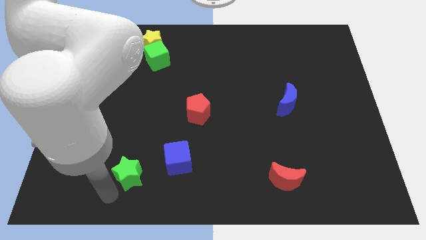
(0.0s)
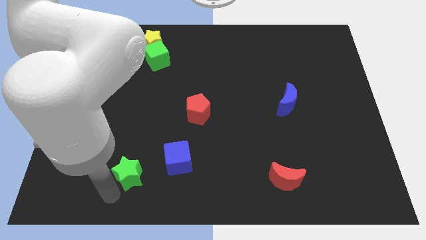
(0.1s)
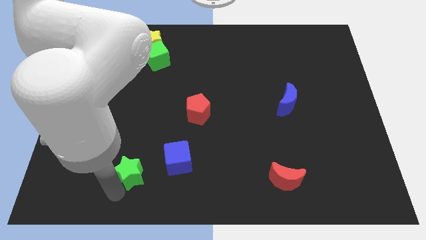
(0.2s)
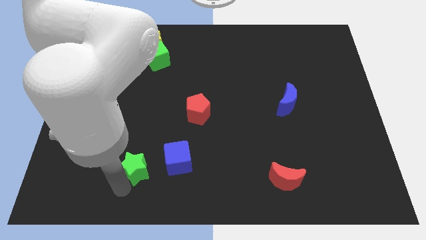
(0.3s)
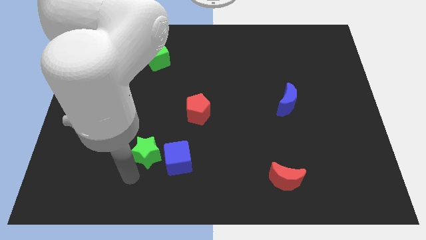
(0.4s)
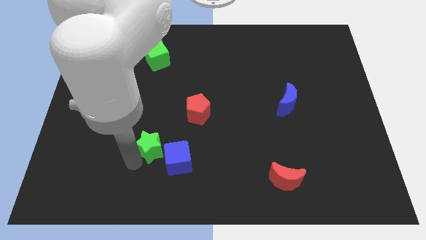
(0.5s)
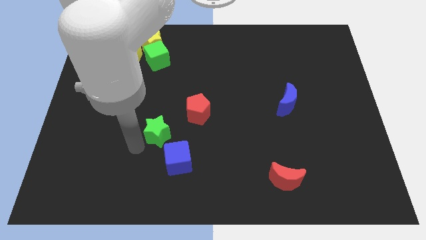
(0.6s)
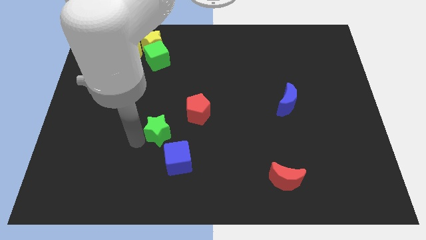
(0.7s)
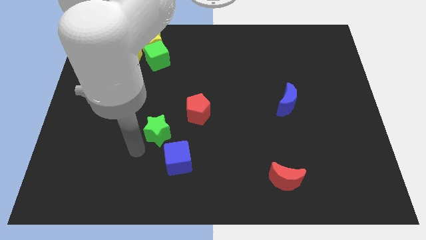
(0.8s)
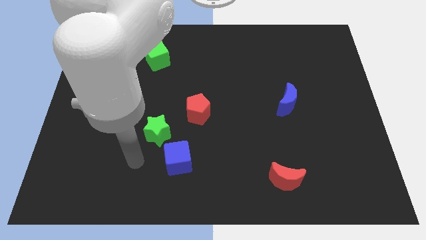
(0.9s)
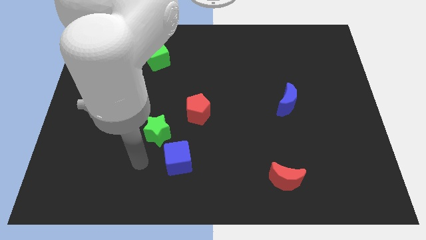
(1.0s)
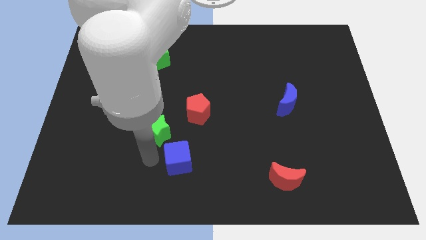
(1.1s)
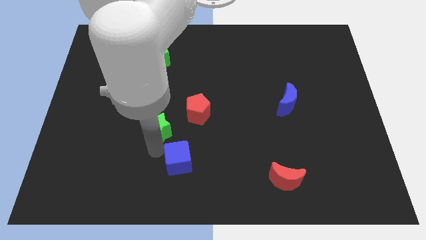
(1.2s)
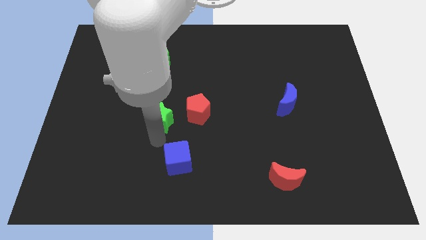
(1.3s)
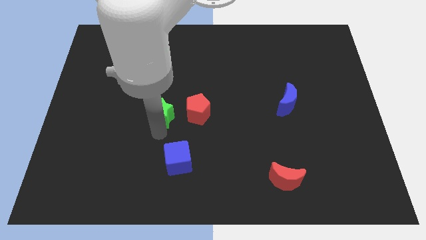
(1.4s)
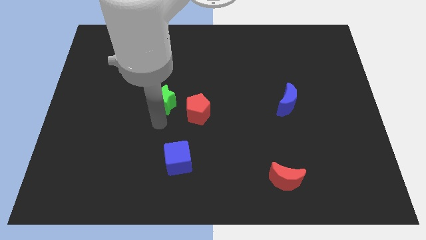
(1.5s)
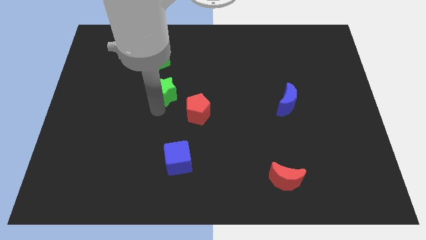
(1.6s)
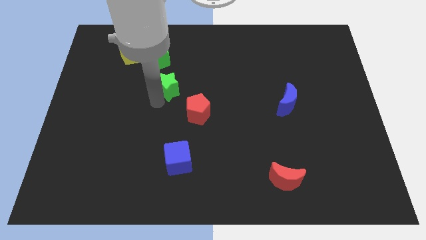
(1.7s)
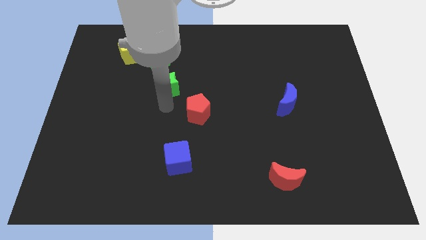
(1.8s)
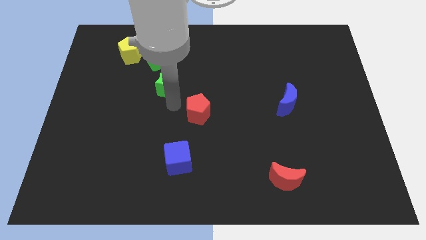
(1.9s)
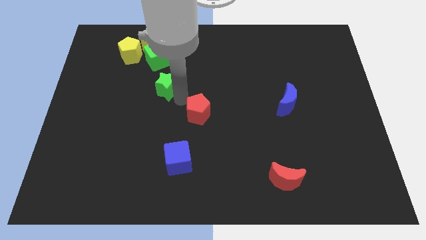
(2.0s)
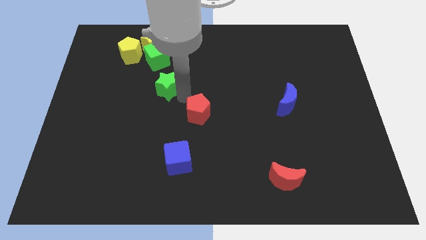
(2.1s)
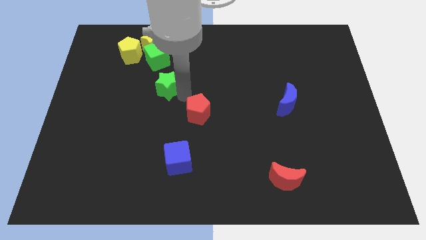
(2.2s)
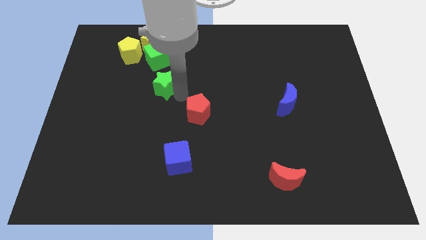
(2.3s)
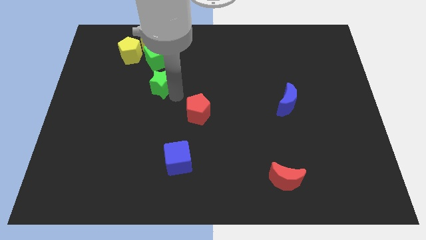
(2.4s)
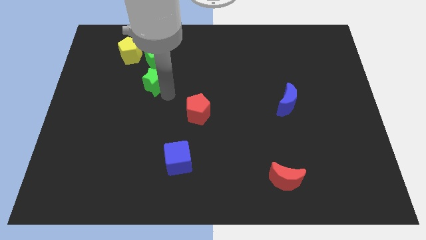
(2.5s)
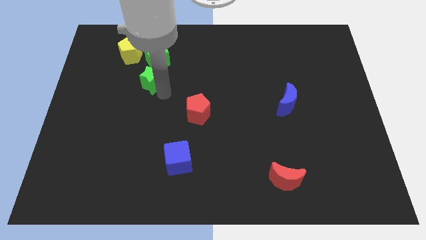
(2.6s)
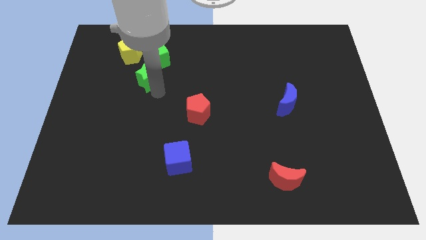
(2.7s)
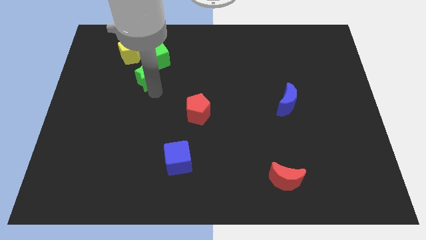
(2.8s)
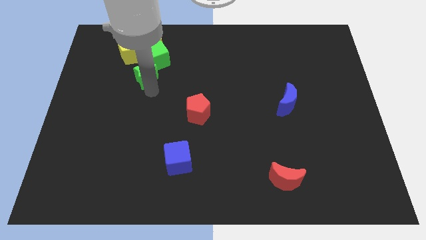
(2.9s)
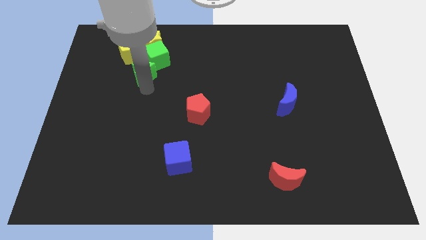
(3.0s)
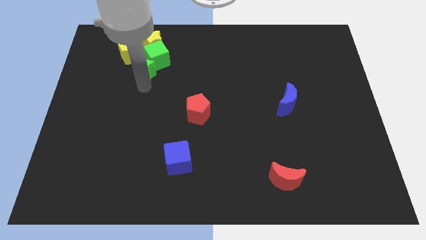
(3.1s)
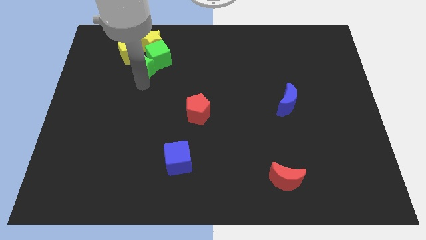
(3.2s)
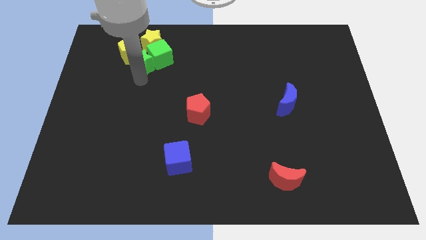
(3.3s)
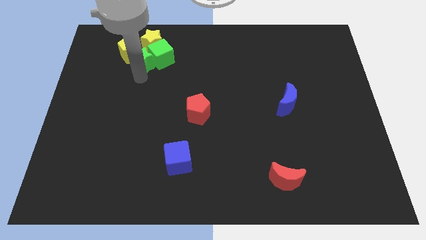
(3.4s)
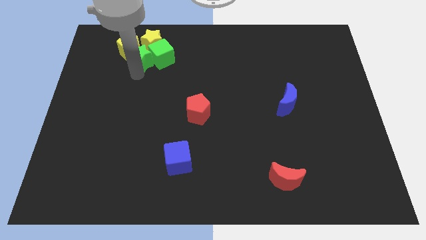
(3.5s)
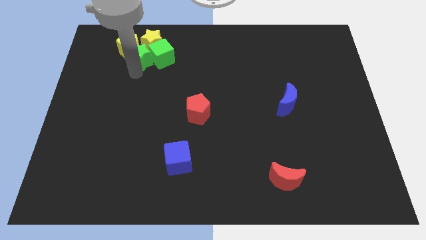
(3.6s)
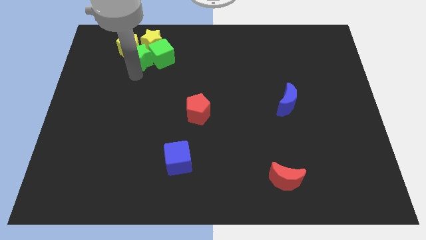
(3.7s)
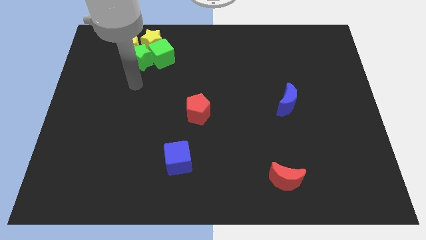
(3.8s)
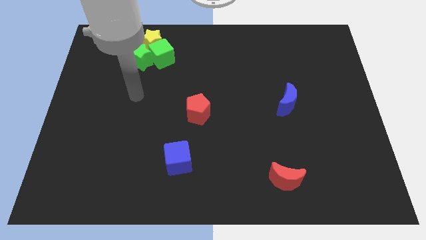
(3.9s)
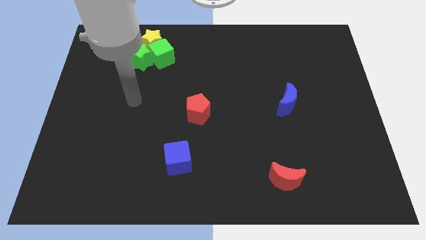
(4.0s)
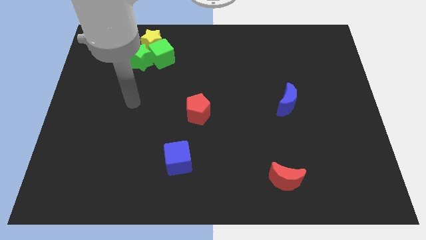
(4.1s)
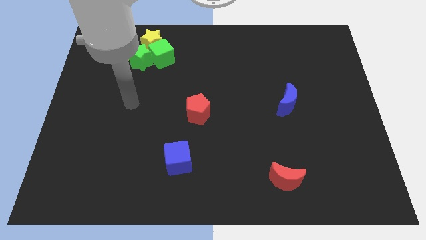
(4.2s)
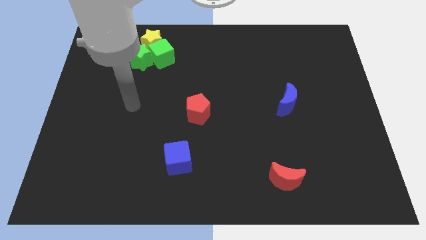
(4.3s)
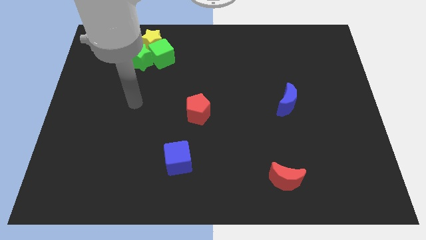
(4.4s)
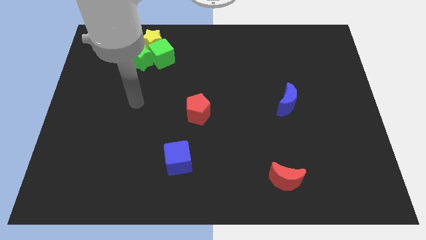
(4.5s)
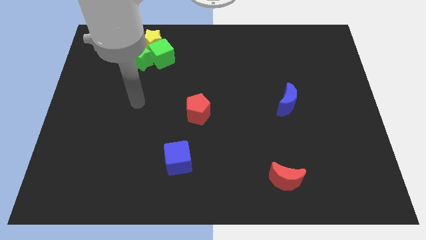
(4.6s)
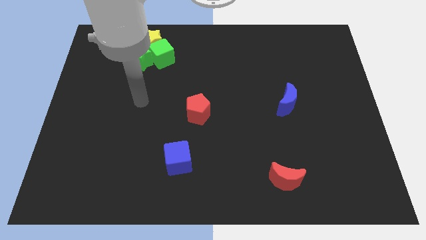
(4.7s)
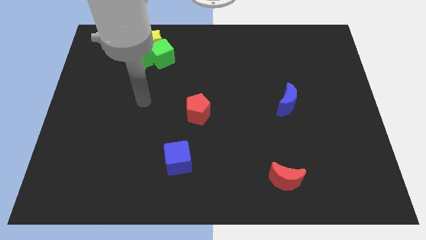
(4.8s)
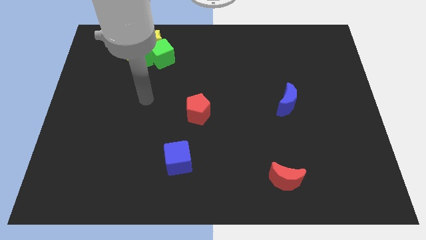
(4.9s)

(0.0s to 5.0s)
move the green star to the group of blocks

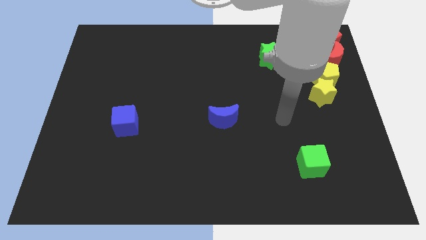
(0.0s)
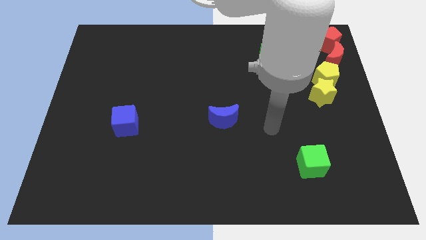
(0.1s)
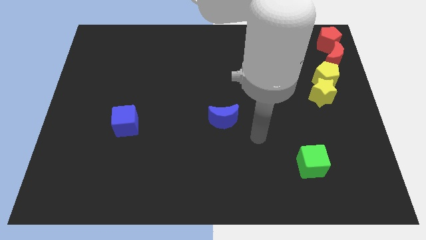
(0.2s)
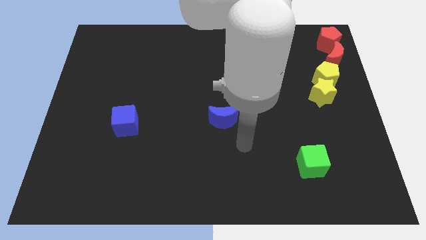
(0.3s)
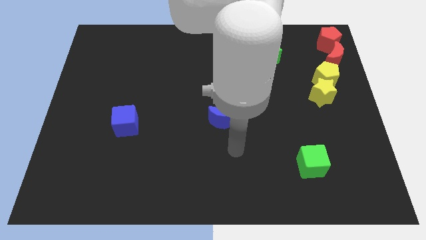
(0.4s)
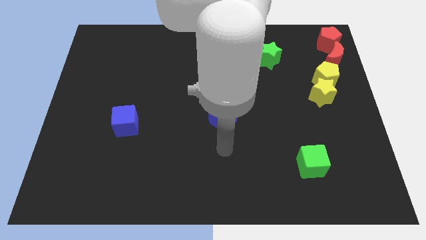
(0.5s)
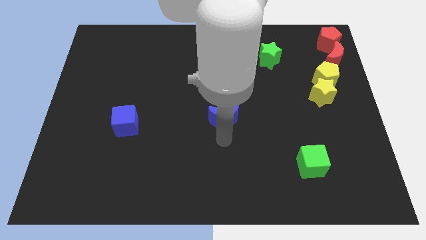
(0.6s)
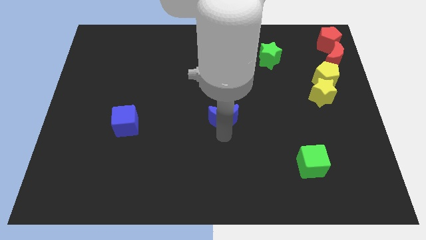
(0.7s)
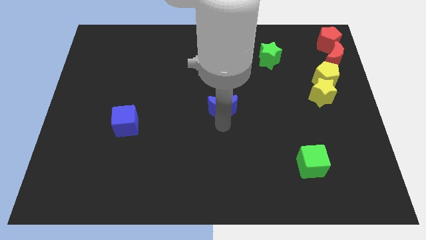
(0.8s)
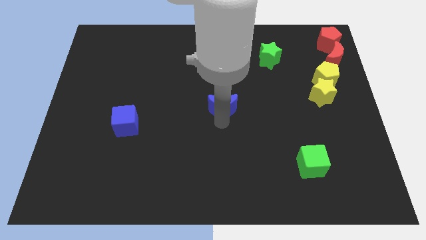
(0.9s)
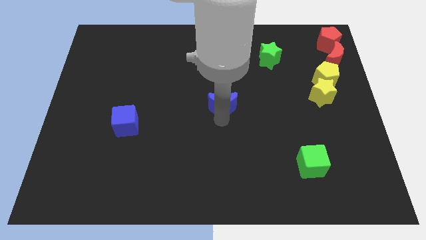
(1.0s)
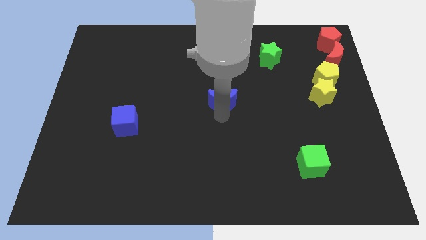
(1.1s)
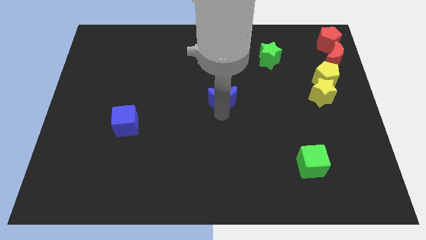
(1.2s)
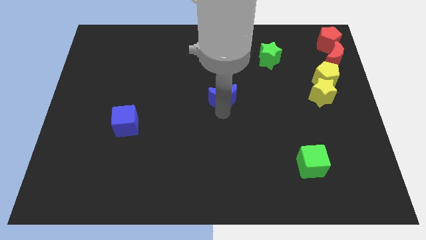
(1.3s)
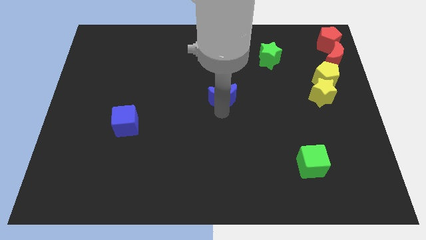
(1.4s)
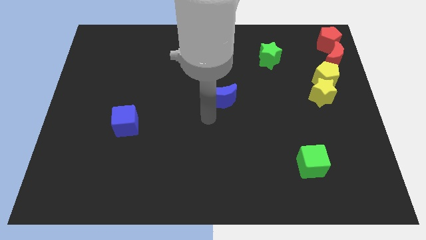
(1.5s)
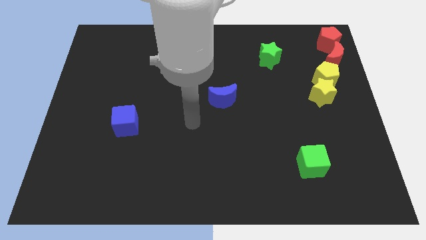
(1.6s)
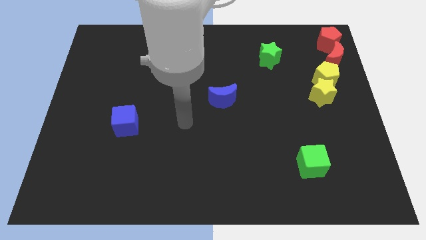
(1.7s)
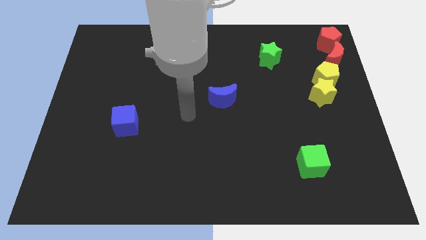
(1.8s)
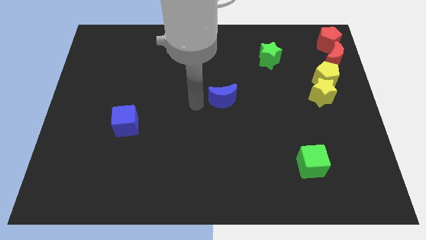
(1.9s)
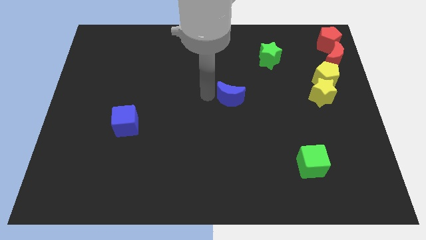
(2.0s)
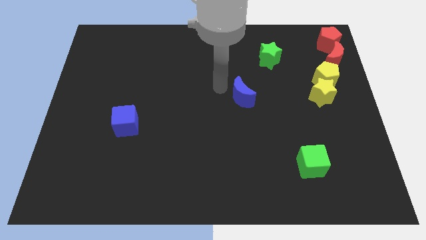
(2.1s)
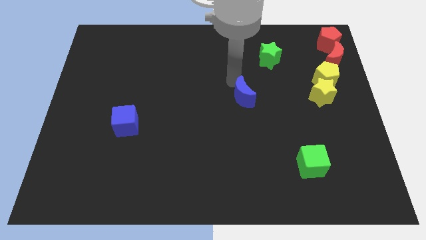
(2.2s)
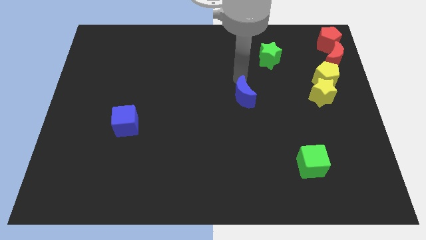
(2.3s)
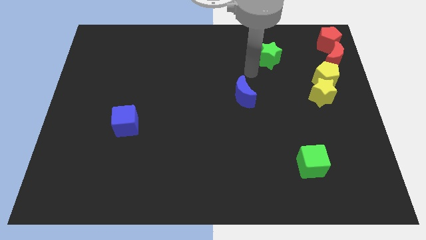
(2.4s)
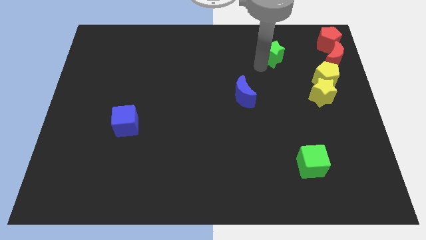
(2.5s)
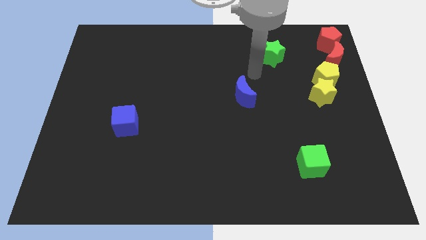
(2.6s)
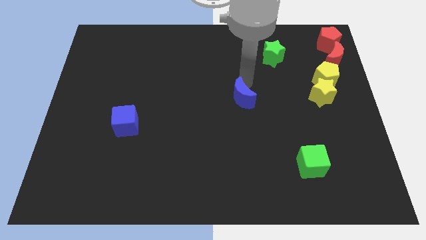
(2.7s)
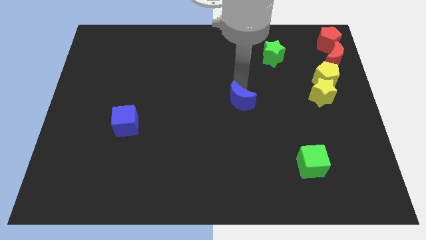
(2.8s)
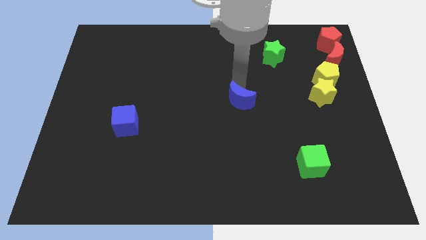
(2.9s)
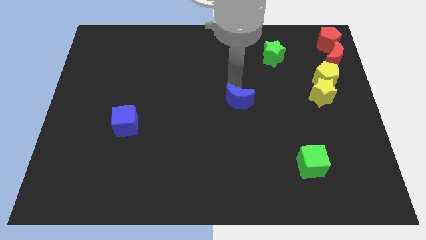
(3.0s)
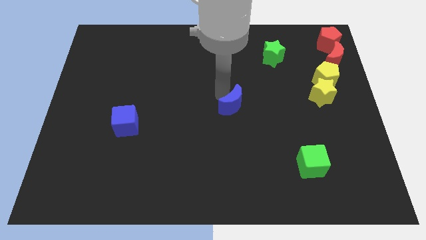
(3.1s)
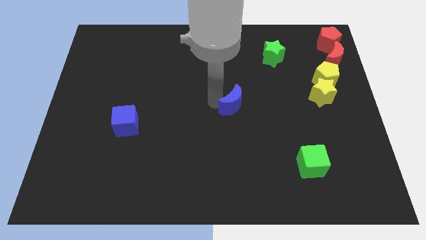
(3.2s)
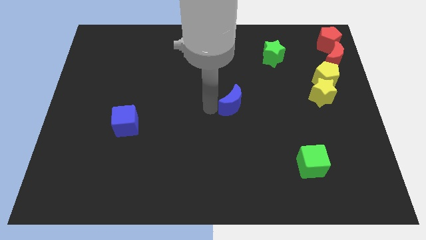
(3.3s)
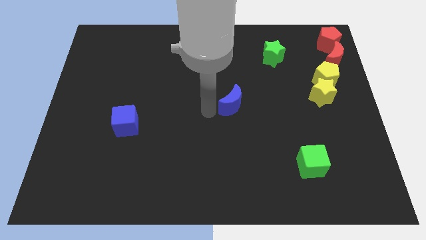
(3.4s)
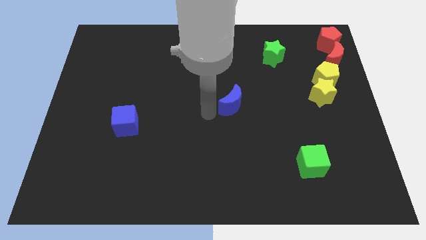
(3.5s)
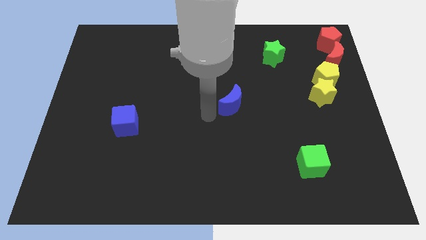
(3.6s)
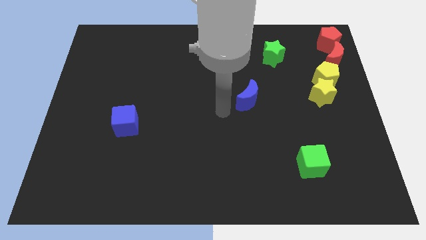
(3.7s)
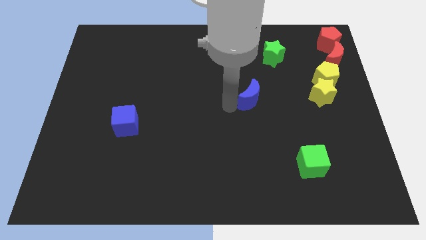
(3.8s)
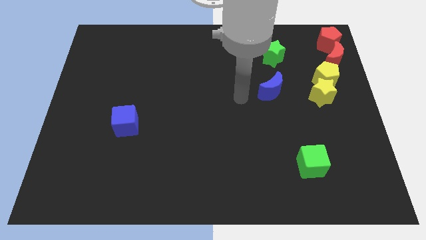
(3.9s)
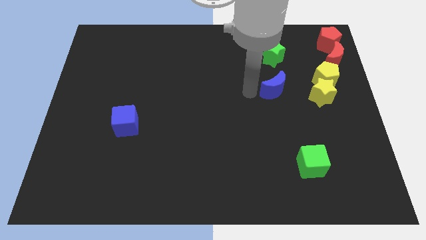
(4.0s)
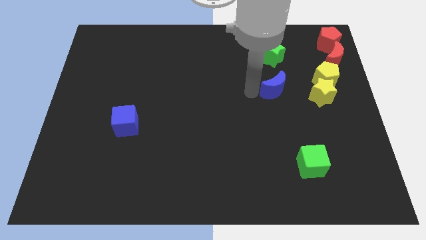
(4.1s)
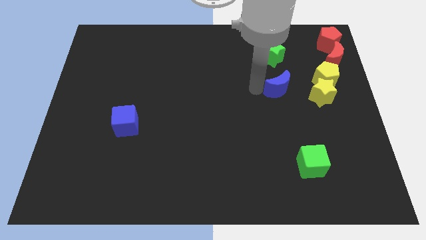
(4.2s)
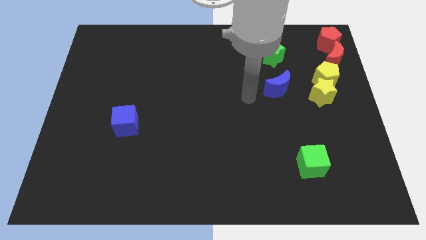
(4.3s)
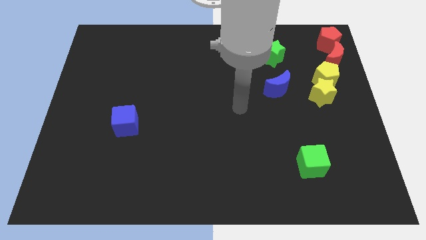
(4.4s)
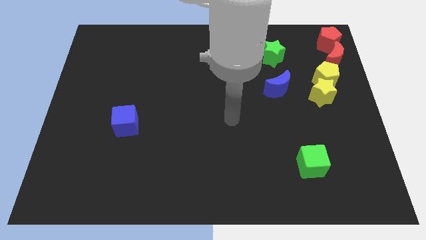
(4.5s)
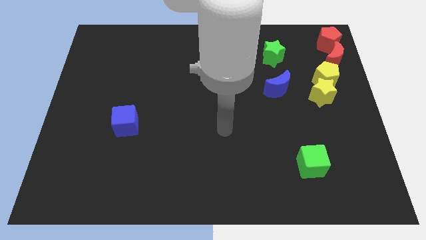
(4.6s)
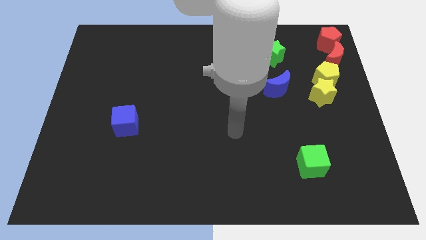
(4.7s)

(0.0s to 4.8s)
place the blue crescent below the green star
